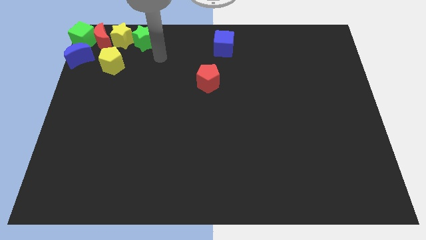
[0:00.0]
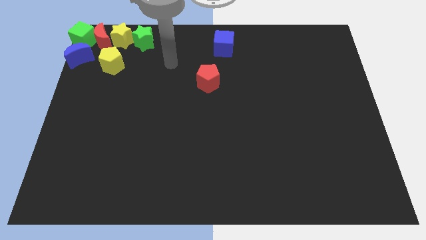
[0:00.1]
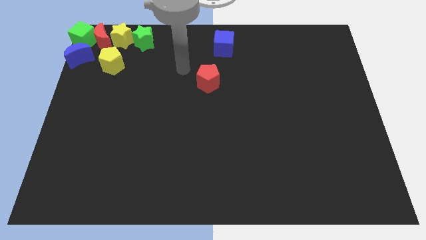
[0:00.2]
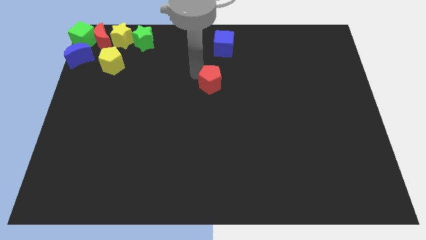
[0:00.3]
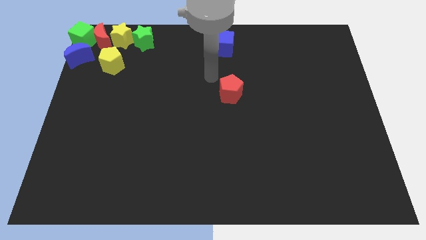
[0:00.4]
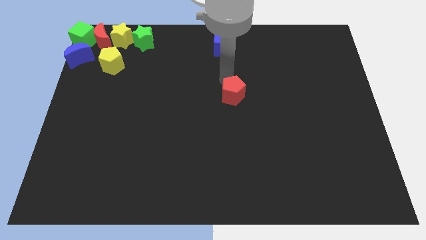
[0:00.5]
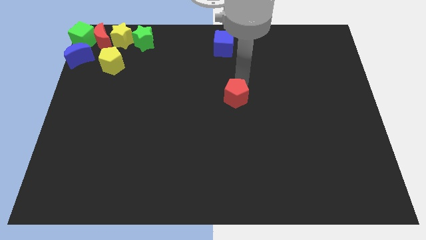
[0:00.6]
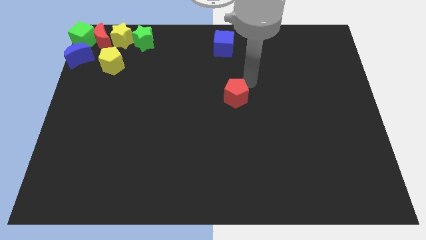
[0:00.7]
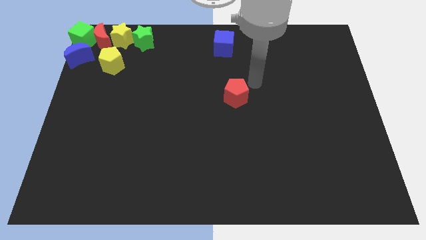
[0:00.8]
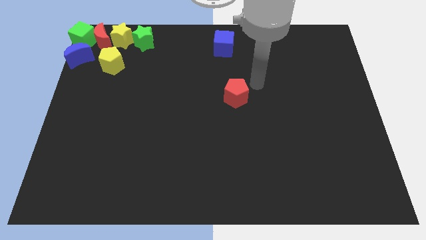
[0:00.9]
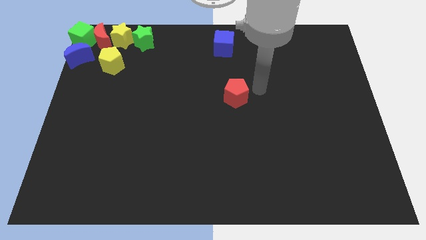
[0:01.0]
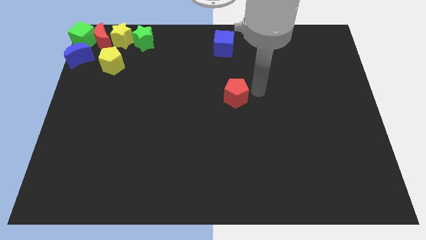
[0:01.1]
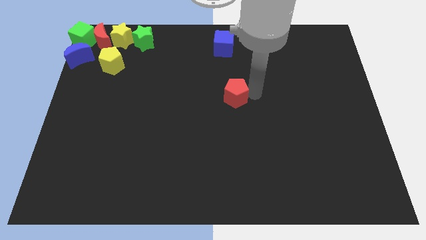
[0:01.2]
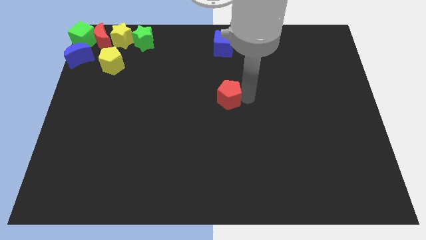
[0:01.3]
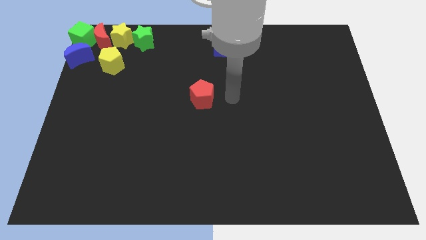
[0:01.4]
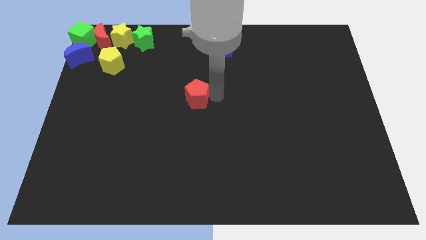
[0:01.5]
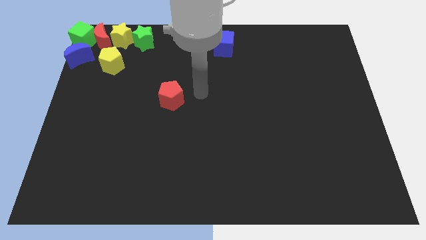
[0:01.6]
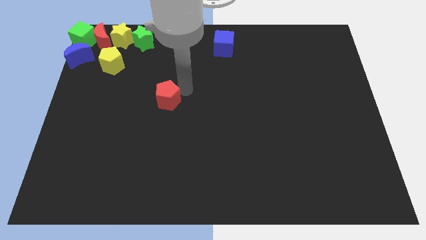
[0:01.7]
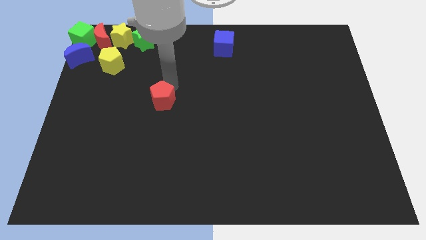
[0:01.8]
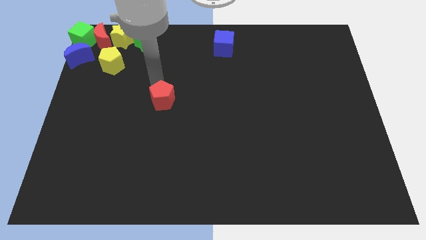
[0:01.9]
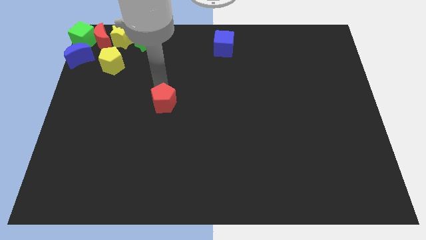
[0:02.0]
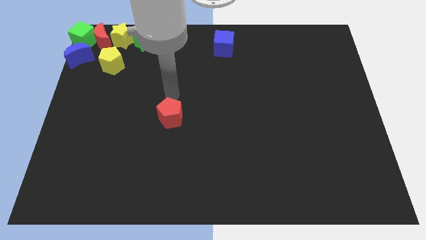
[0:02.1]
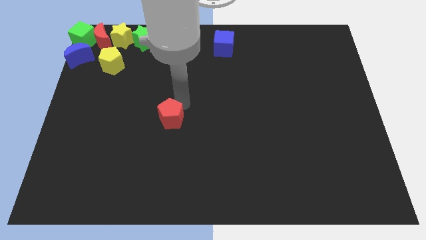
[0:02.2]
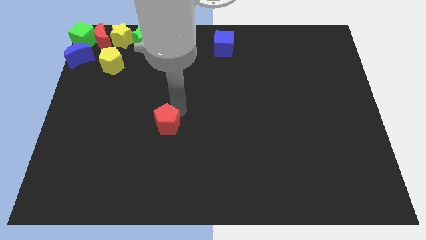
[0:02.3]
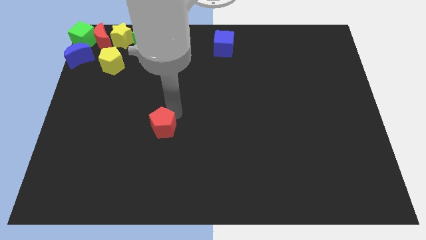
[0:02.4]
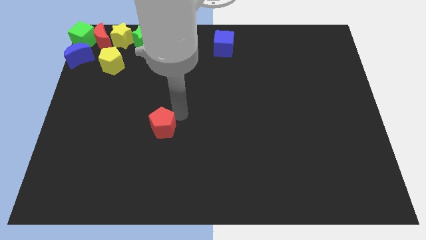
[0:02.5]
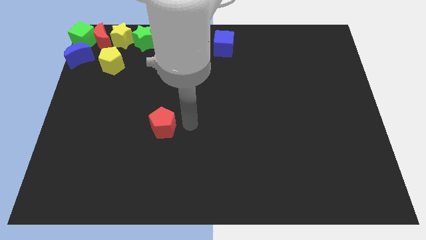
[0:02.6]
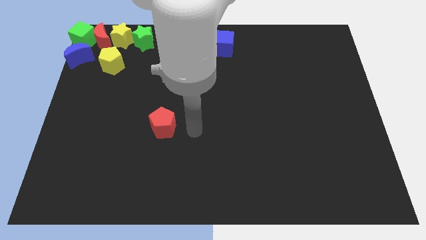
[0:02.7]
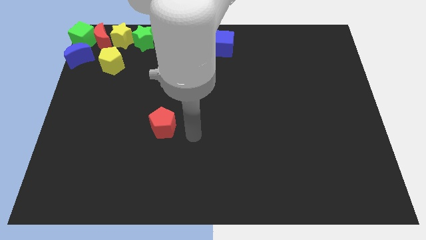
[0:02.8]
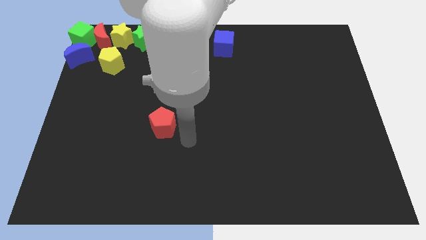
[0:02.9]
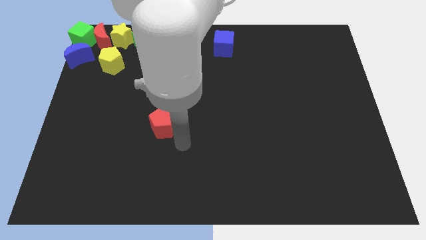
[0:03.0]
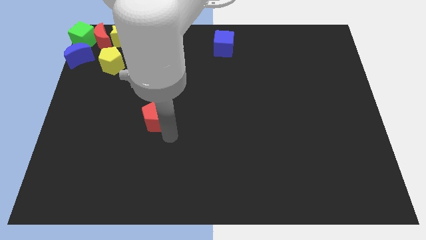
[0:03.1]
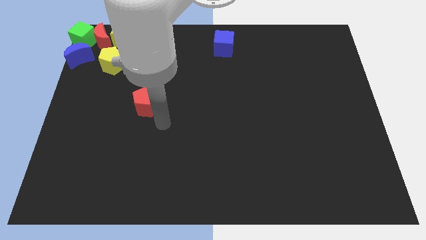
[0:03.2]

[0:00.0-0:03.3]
push the red pentagon to left side of the board

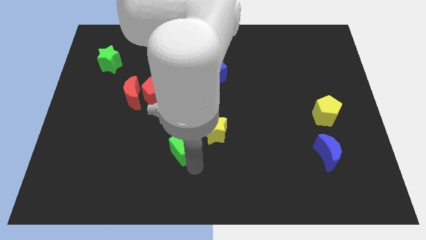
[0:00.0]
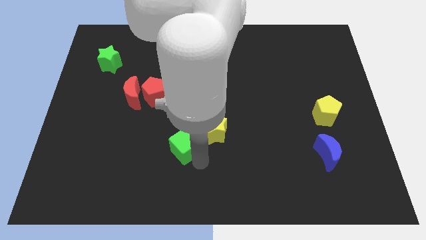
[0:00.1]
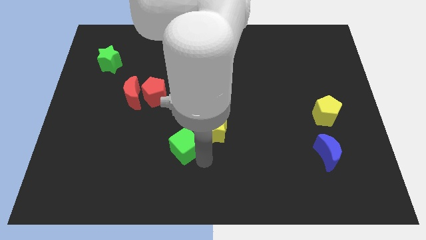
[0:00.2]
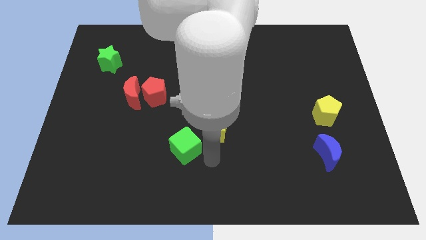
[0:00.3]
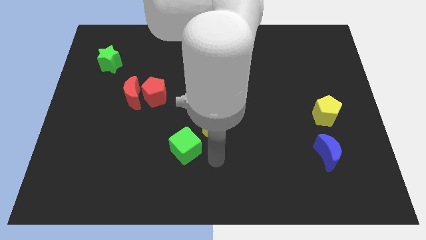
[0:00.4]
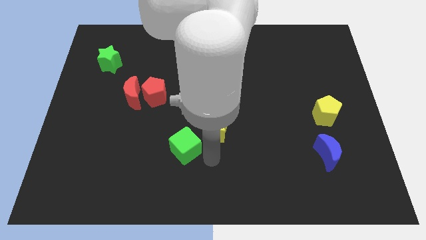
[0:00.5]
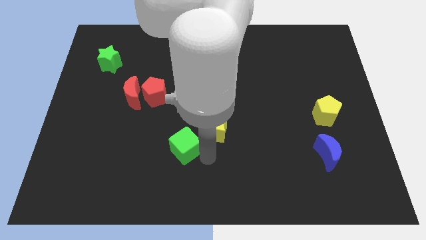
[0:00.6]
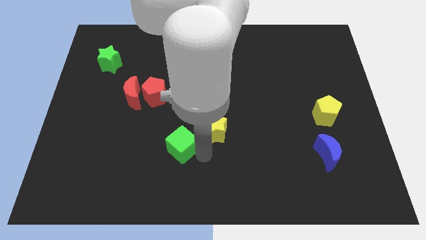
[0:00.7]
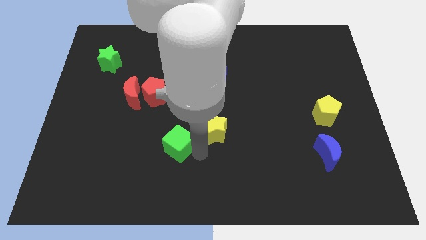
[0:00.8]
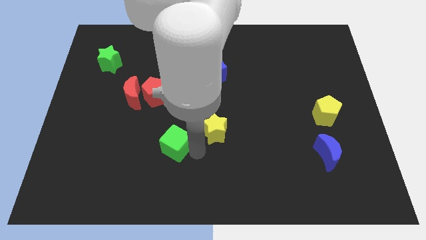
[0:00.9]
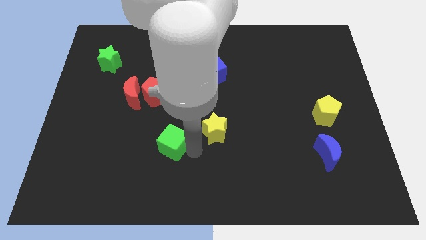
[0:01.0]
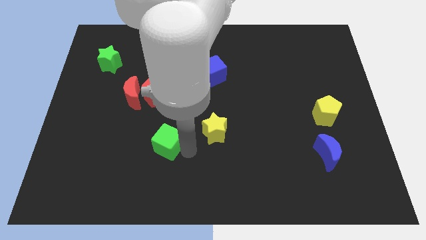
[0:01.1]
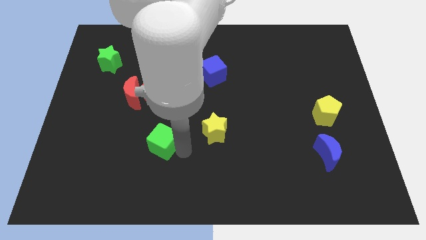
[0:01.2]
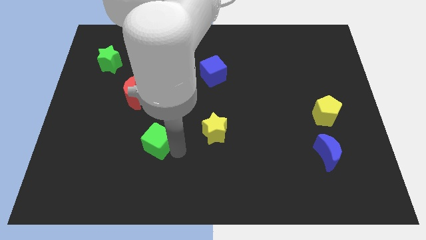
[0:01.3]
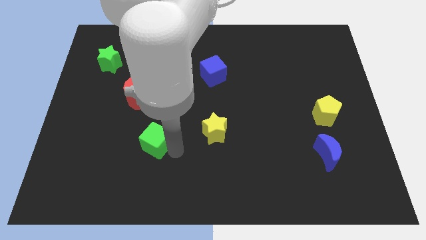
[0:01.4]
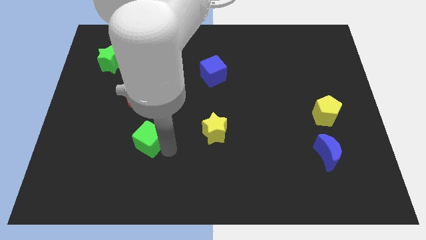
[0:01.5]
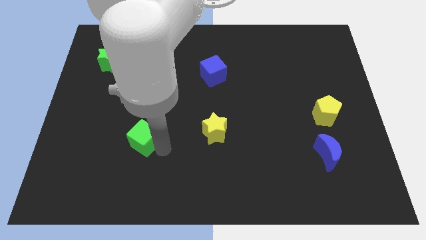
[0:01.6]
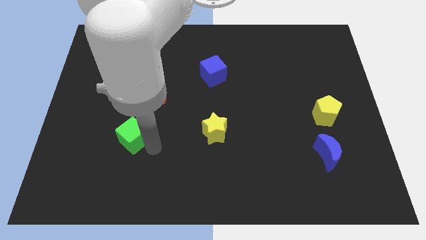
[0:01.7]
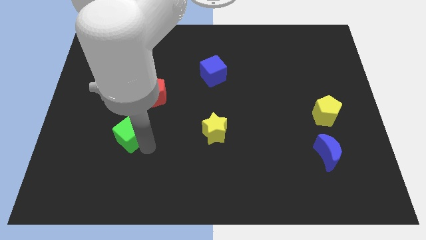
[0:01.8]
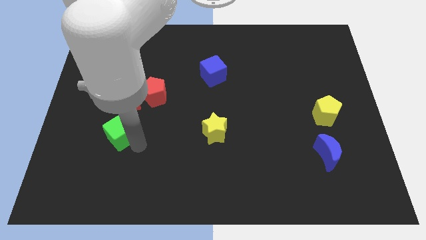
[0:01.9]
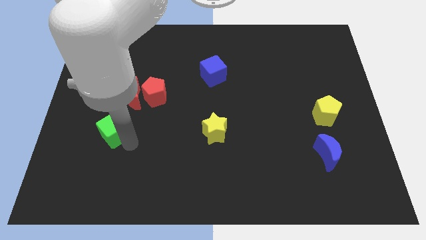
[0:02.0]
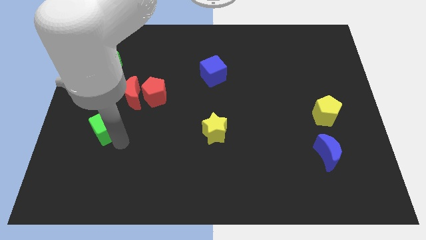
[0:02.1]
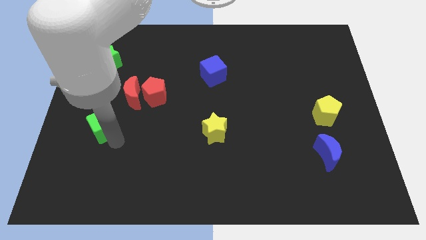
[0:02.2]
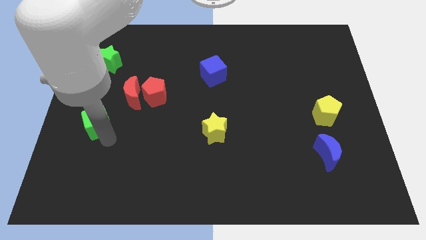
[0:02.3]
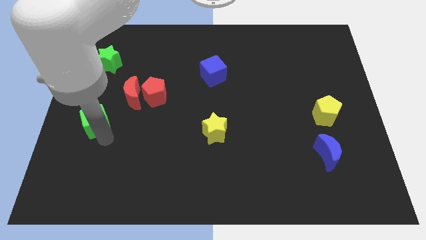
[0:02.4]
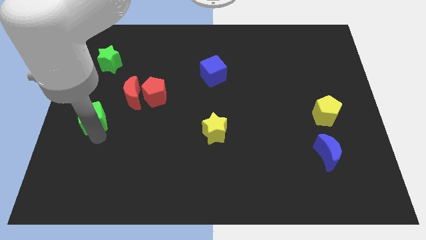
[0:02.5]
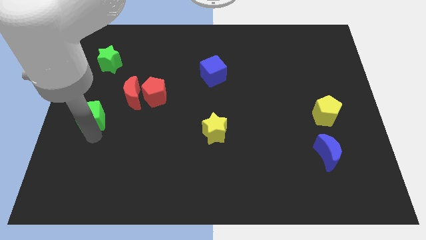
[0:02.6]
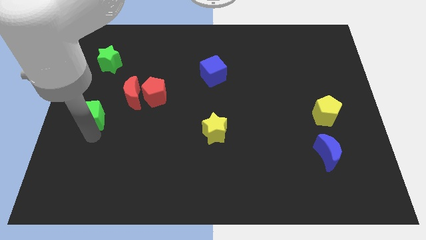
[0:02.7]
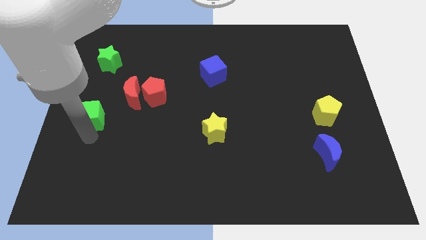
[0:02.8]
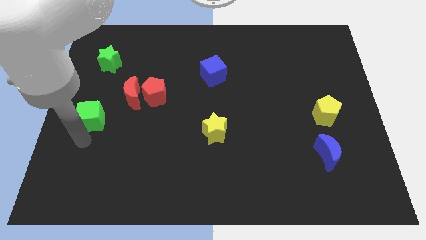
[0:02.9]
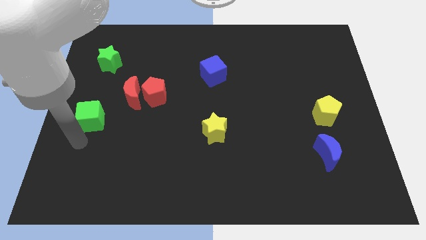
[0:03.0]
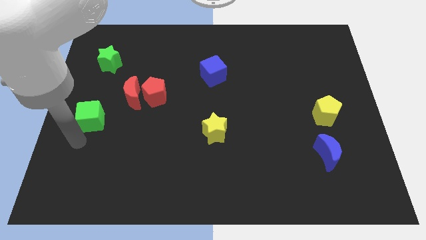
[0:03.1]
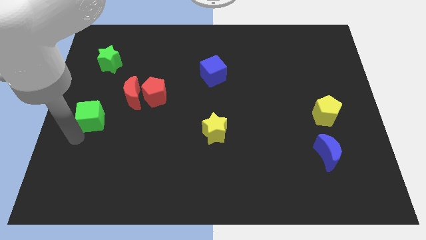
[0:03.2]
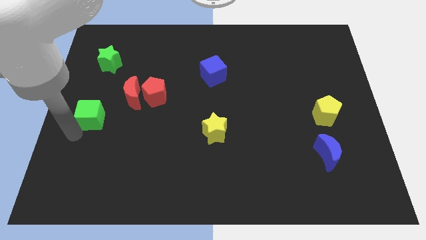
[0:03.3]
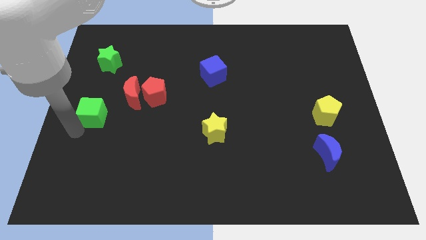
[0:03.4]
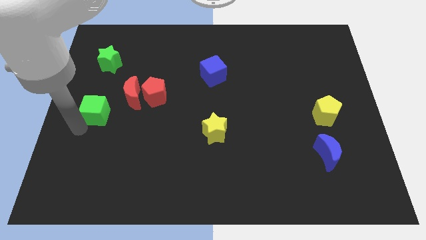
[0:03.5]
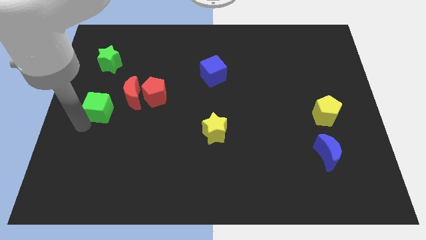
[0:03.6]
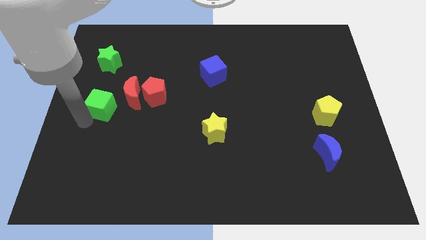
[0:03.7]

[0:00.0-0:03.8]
move the green cube diagonally to the red crescent

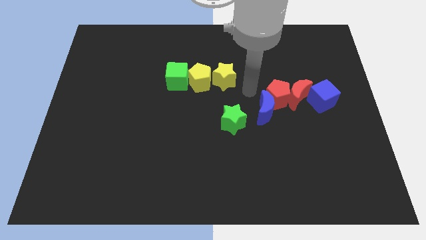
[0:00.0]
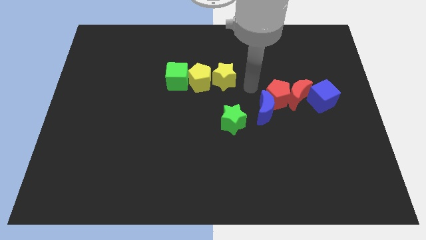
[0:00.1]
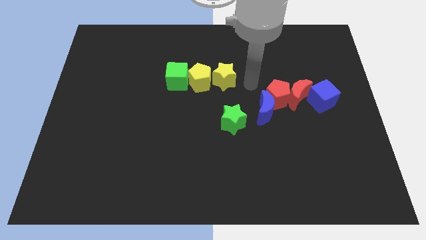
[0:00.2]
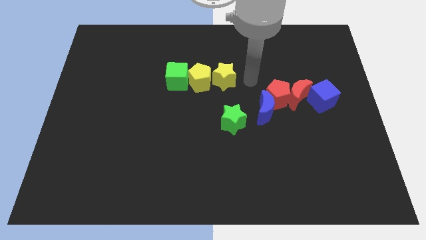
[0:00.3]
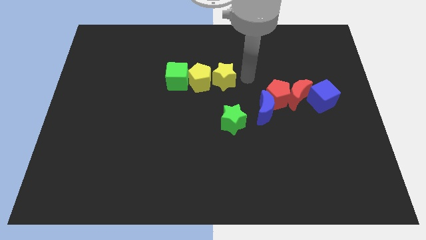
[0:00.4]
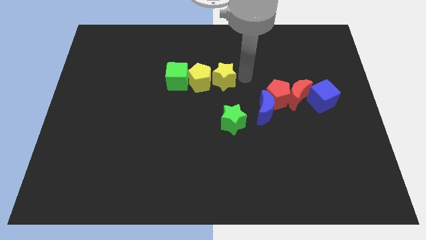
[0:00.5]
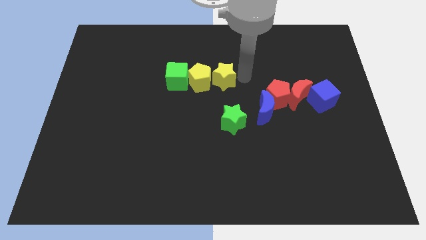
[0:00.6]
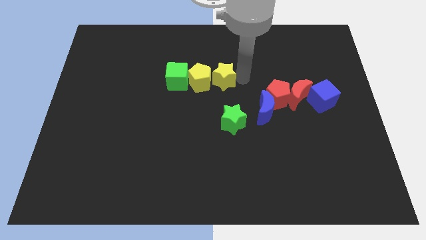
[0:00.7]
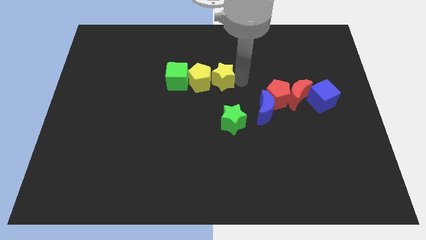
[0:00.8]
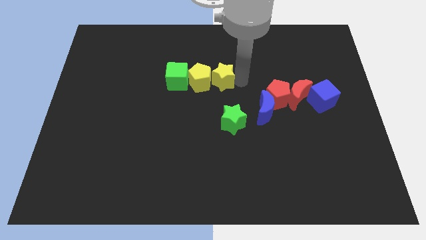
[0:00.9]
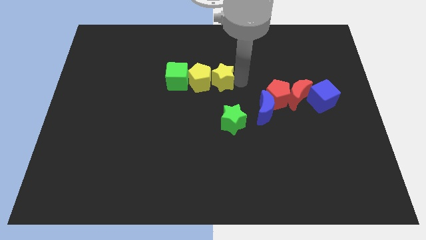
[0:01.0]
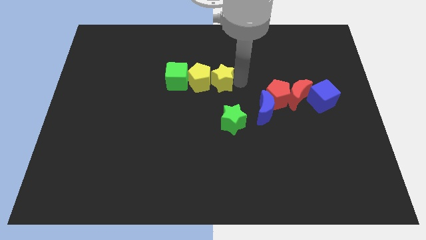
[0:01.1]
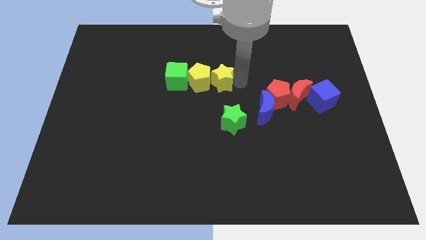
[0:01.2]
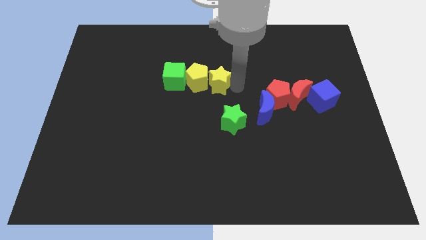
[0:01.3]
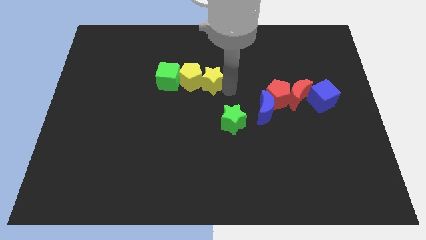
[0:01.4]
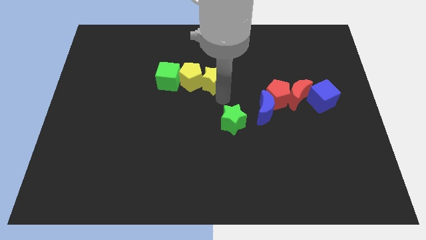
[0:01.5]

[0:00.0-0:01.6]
place the yellow star to the right of the yellow pentagon
